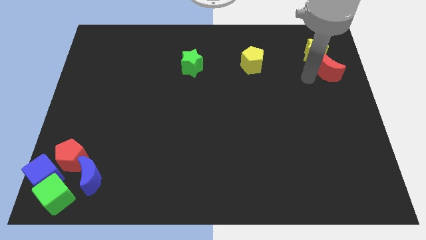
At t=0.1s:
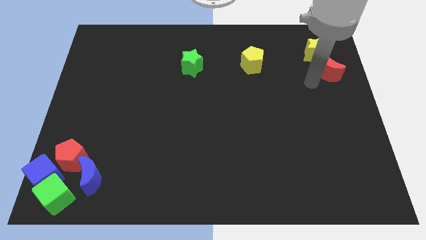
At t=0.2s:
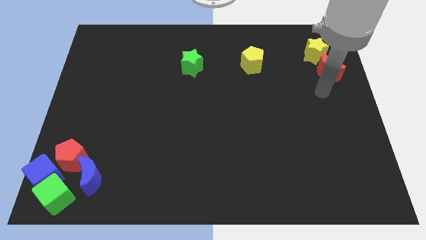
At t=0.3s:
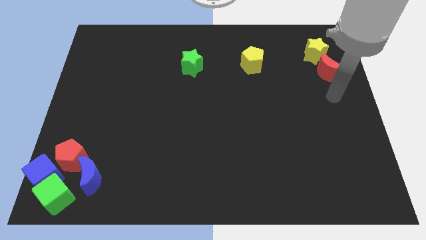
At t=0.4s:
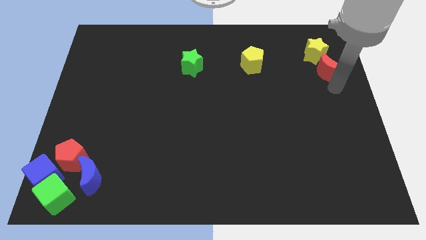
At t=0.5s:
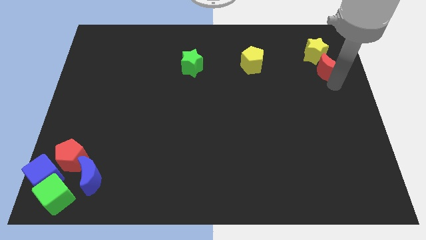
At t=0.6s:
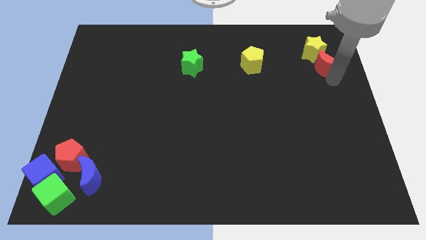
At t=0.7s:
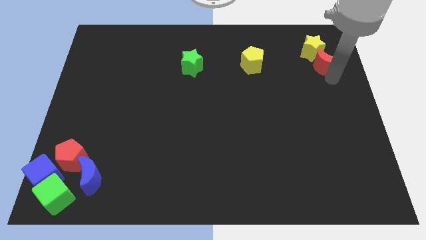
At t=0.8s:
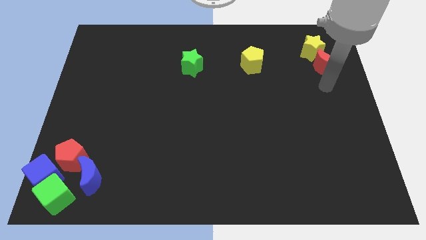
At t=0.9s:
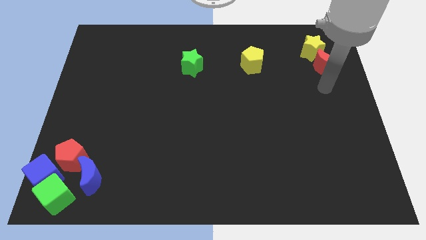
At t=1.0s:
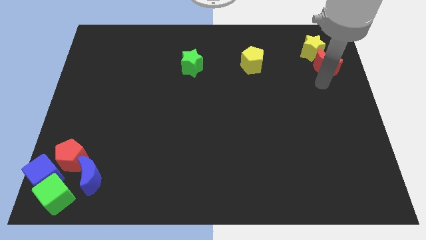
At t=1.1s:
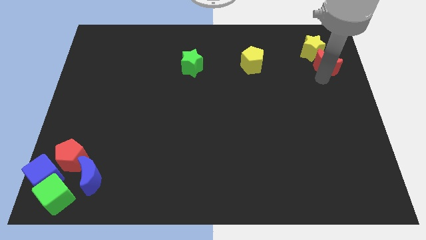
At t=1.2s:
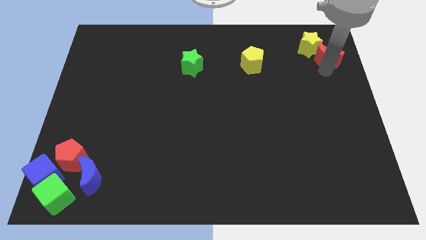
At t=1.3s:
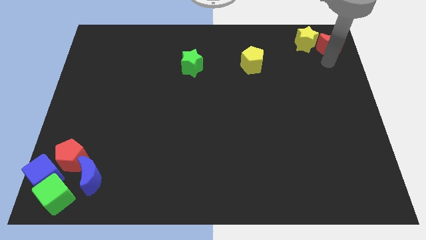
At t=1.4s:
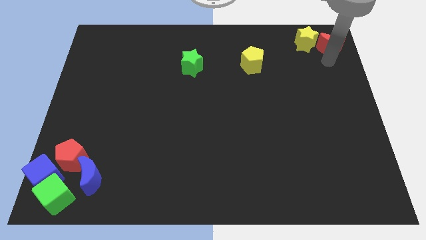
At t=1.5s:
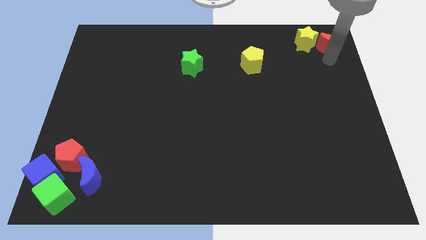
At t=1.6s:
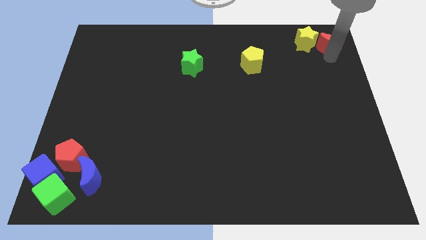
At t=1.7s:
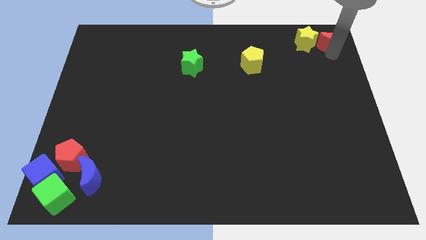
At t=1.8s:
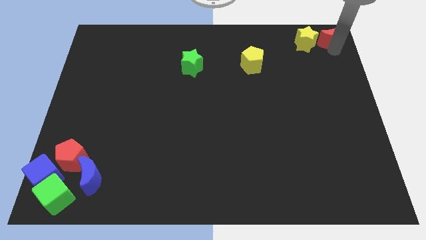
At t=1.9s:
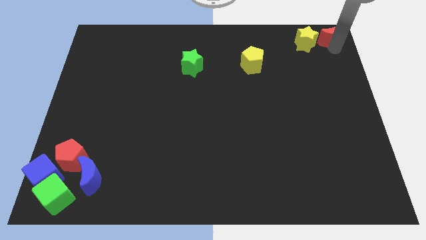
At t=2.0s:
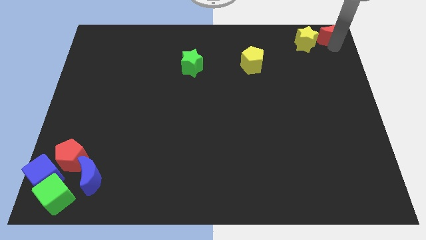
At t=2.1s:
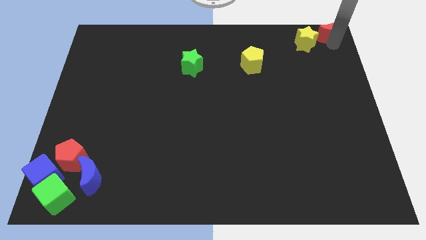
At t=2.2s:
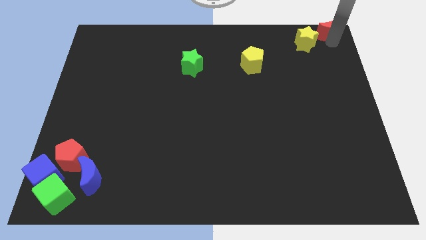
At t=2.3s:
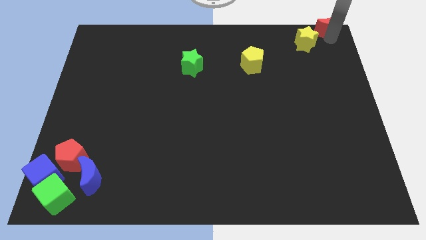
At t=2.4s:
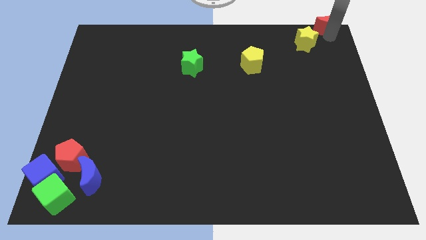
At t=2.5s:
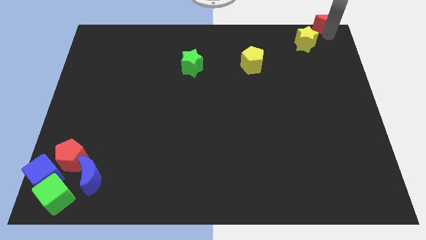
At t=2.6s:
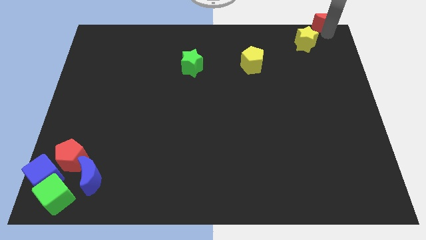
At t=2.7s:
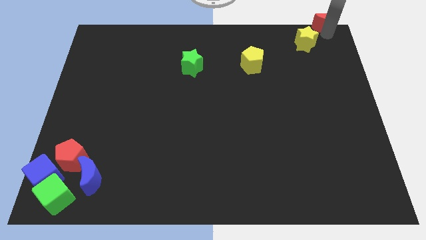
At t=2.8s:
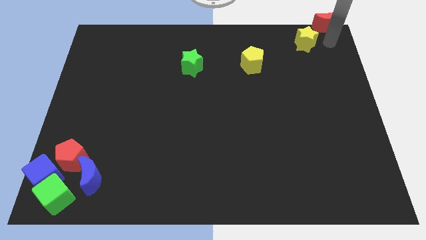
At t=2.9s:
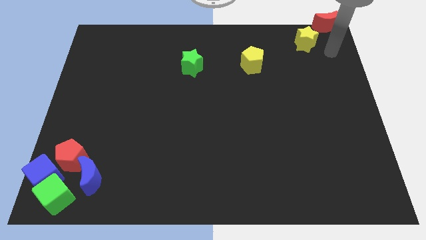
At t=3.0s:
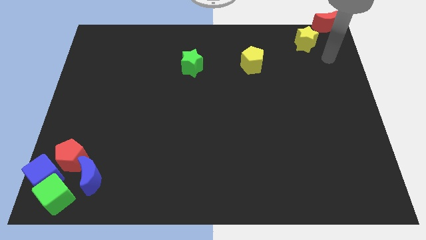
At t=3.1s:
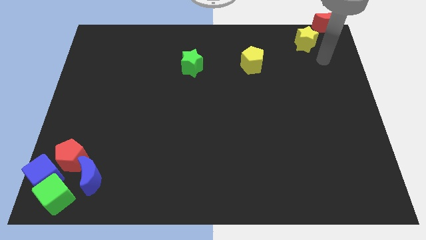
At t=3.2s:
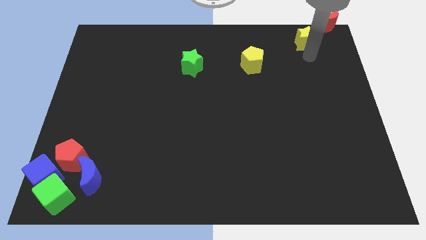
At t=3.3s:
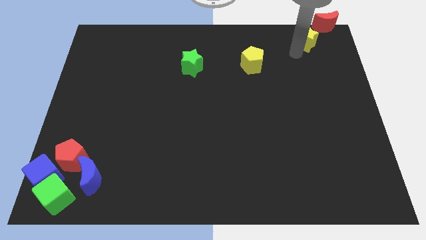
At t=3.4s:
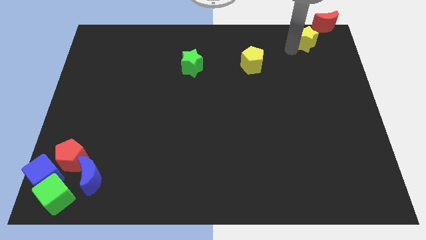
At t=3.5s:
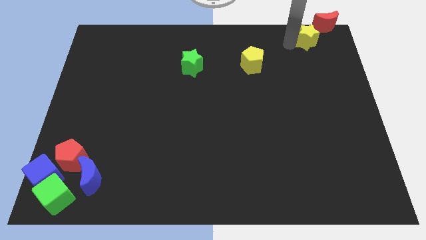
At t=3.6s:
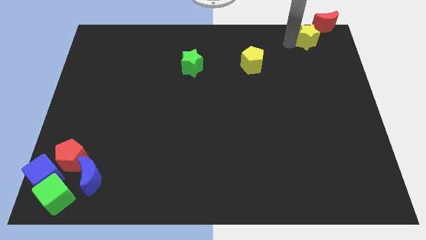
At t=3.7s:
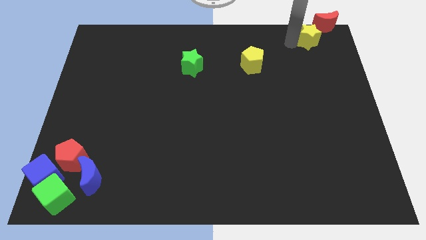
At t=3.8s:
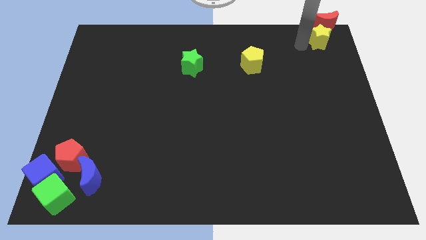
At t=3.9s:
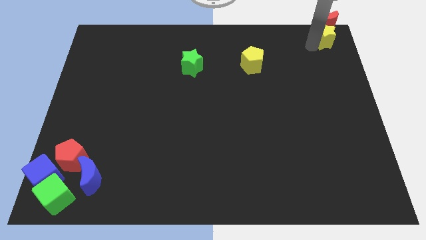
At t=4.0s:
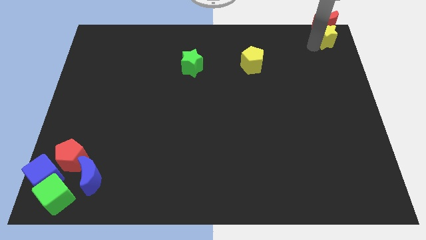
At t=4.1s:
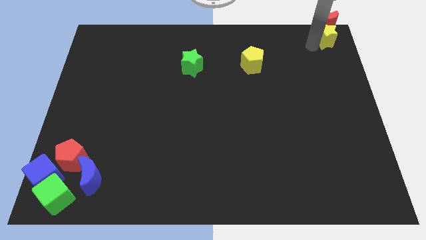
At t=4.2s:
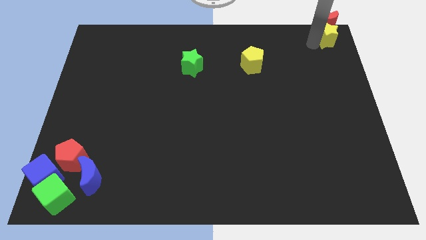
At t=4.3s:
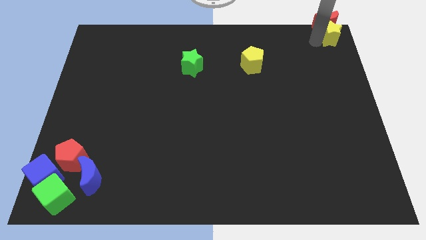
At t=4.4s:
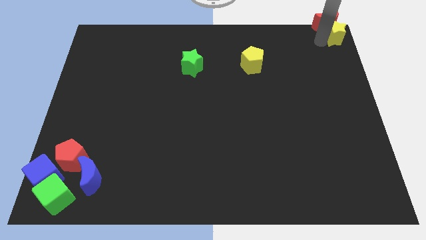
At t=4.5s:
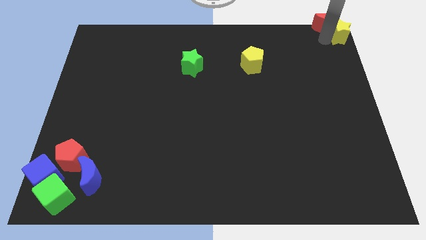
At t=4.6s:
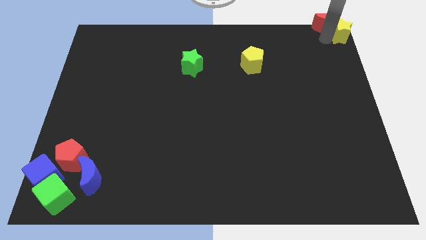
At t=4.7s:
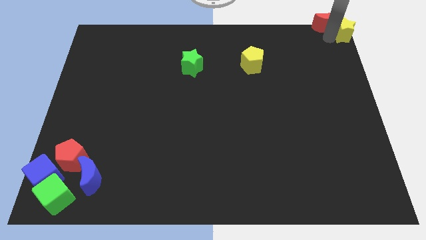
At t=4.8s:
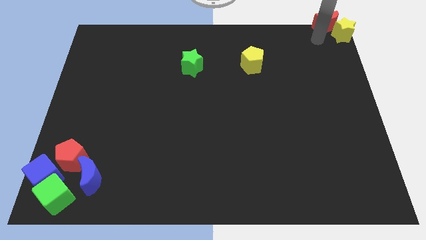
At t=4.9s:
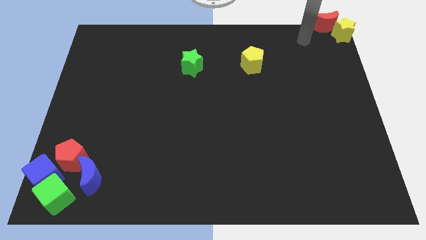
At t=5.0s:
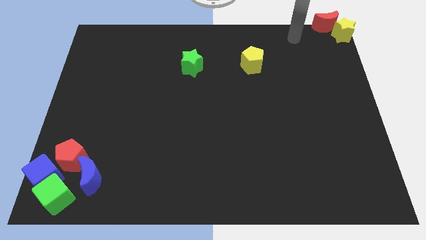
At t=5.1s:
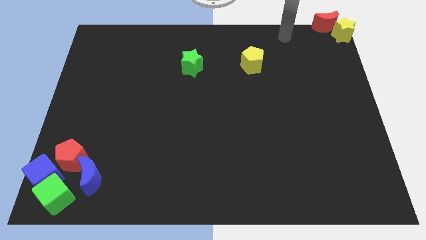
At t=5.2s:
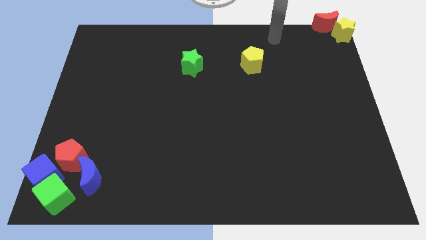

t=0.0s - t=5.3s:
push the yellow star and red moon to top right

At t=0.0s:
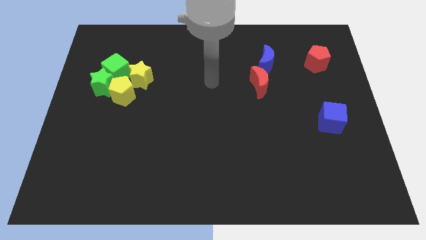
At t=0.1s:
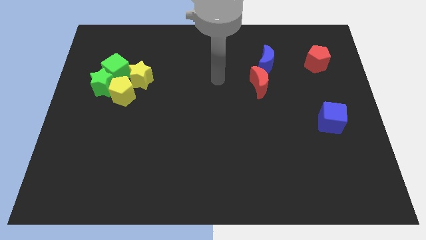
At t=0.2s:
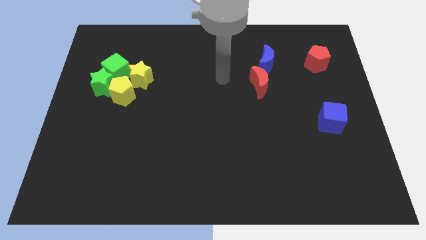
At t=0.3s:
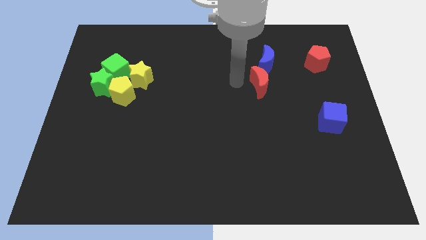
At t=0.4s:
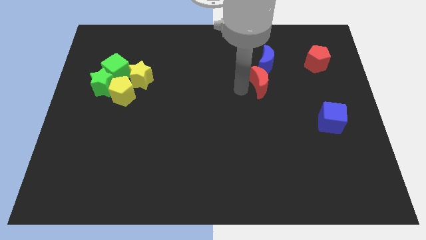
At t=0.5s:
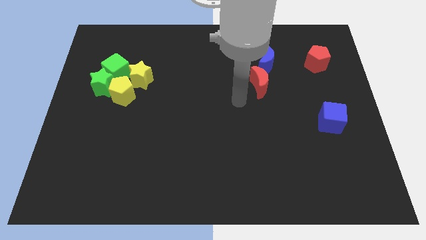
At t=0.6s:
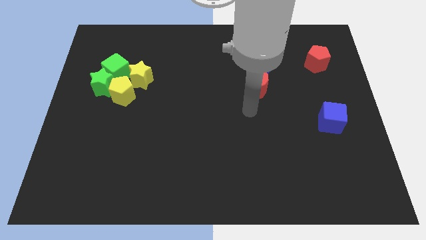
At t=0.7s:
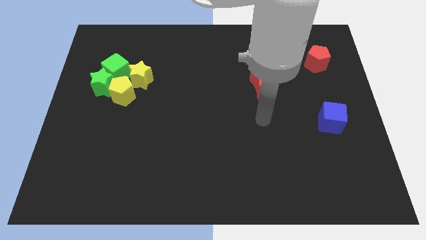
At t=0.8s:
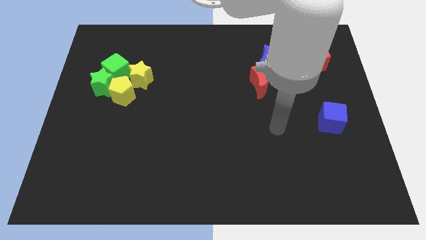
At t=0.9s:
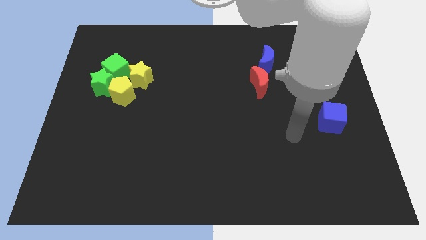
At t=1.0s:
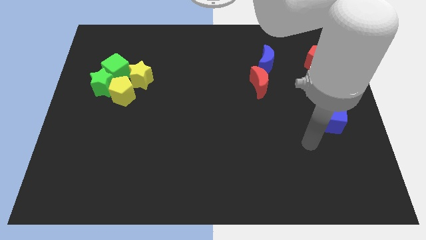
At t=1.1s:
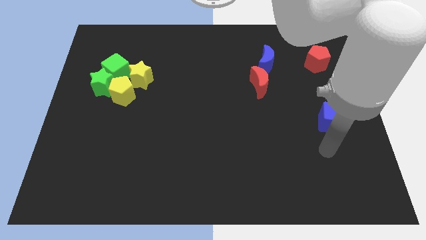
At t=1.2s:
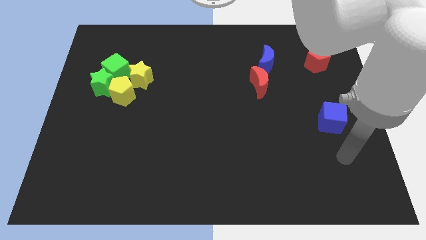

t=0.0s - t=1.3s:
slightly push the blue cube to the bottom of the red pentagon

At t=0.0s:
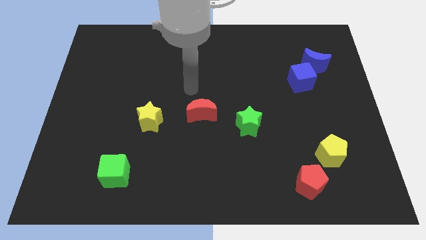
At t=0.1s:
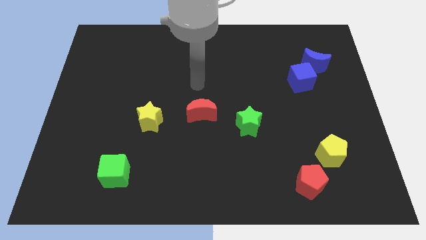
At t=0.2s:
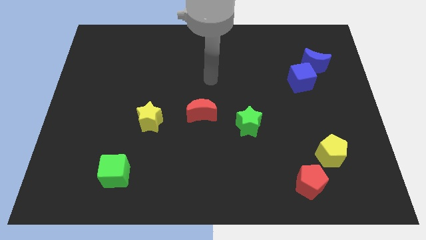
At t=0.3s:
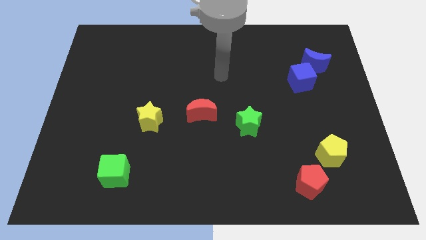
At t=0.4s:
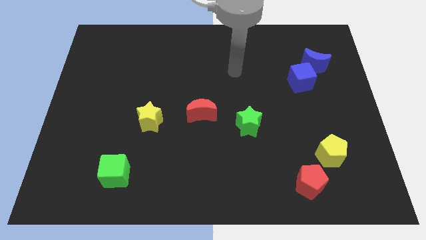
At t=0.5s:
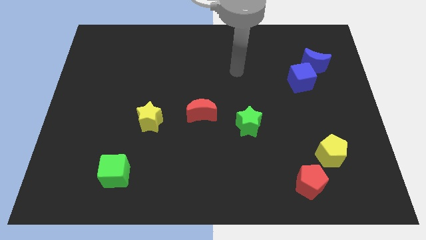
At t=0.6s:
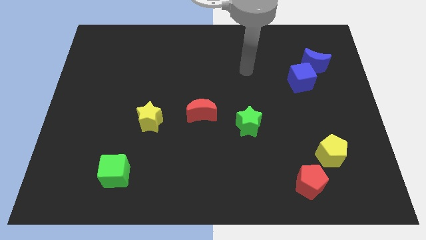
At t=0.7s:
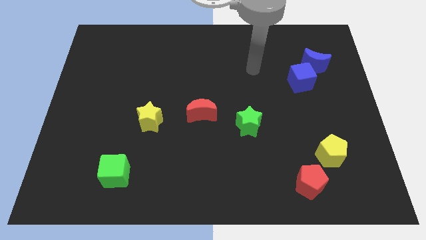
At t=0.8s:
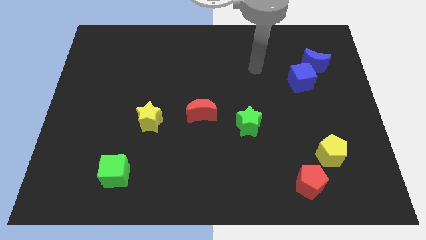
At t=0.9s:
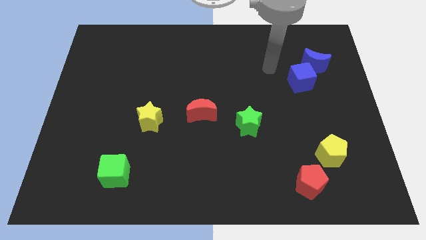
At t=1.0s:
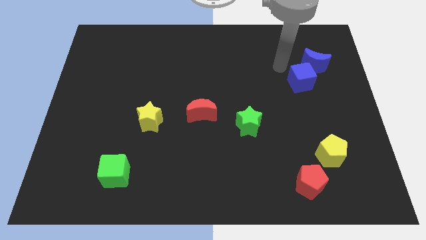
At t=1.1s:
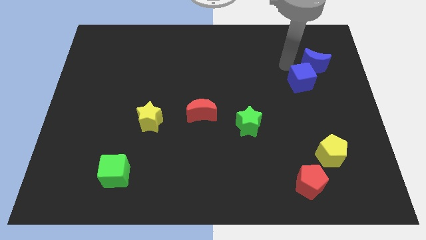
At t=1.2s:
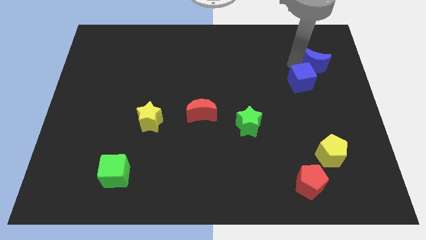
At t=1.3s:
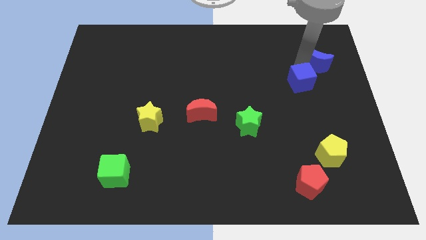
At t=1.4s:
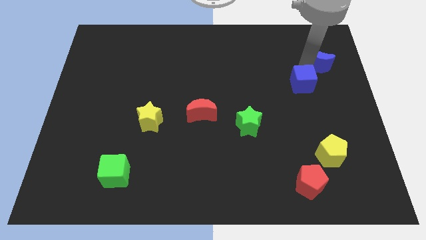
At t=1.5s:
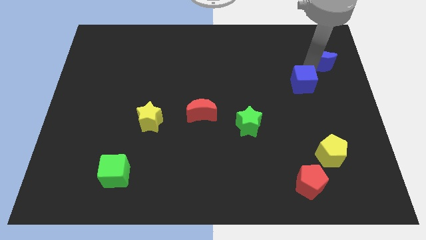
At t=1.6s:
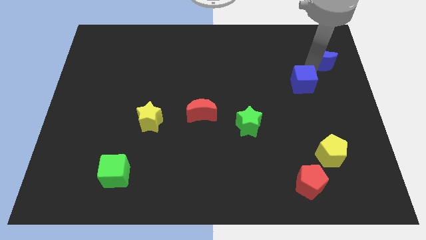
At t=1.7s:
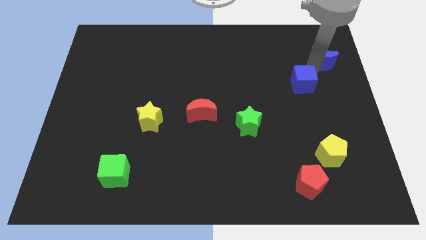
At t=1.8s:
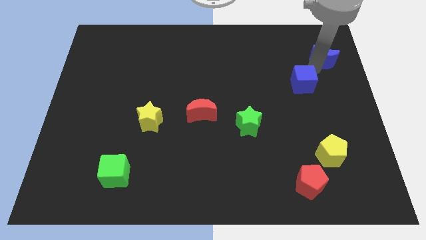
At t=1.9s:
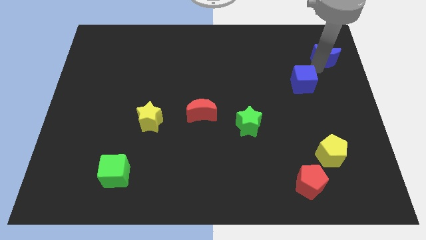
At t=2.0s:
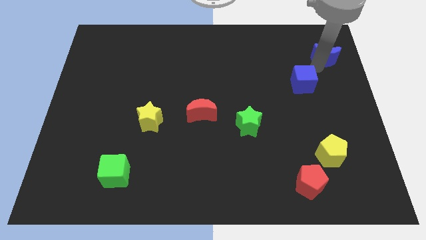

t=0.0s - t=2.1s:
separate the blue moon from the blue cube

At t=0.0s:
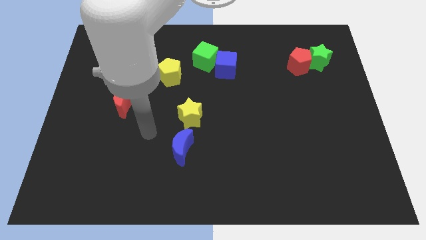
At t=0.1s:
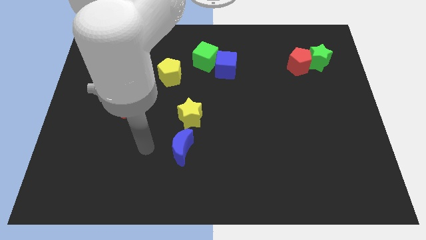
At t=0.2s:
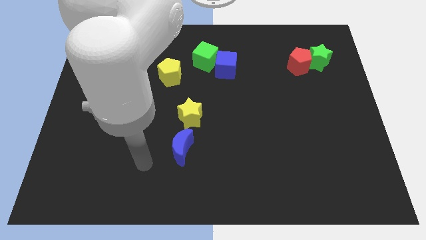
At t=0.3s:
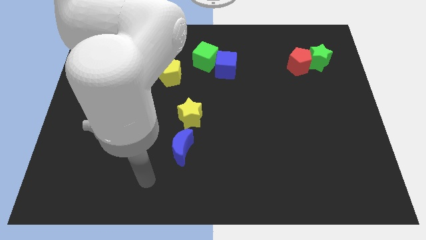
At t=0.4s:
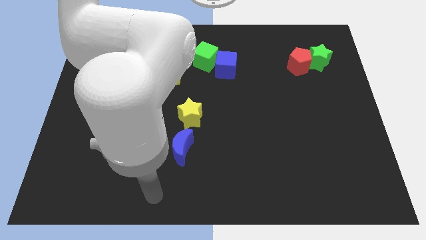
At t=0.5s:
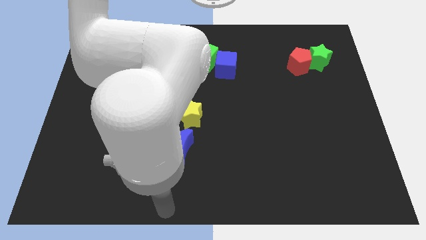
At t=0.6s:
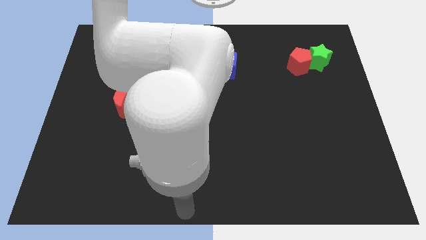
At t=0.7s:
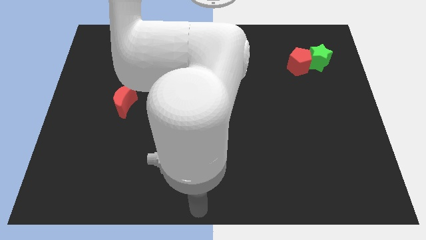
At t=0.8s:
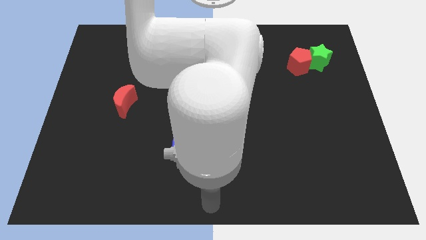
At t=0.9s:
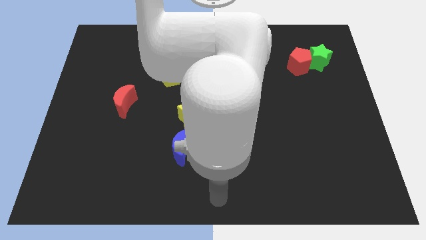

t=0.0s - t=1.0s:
move the arm at the bottom center
